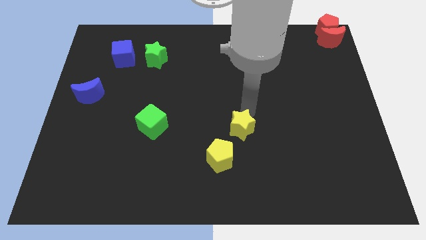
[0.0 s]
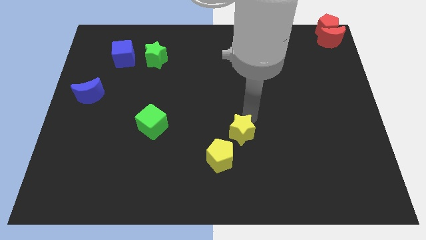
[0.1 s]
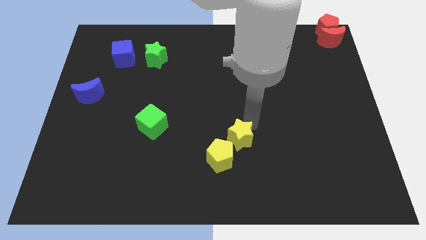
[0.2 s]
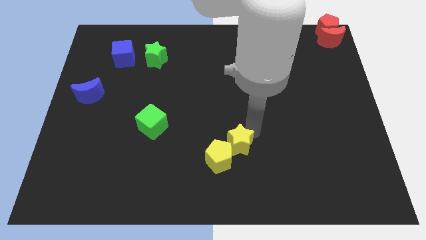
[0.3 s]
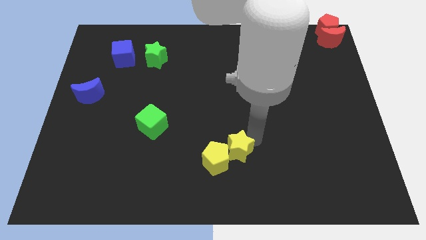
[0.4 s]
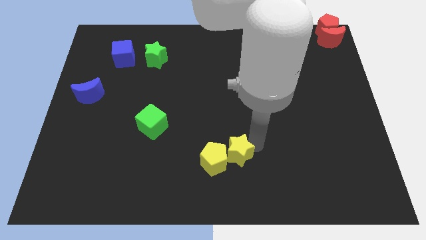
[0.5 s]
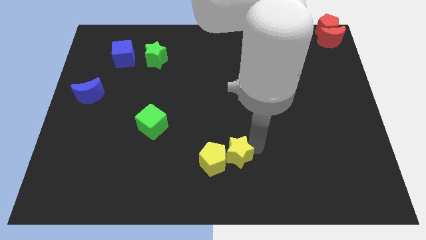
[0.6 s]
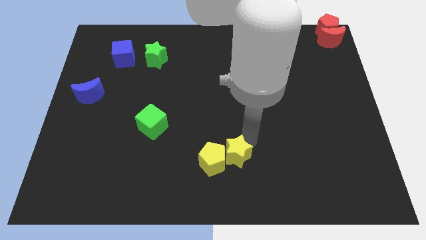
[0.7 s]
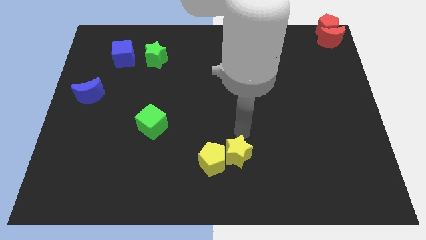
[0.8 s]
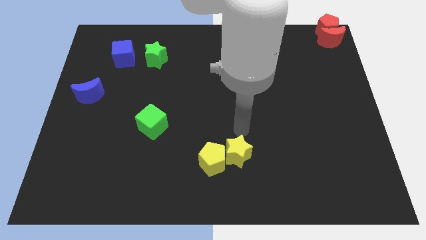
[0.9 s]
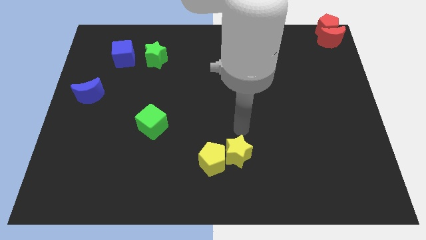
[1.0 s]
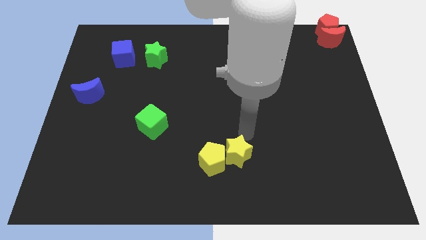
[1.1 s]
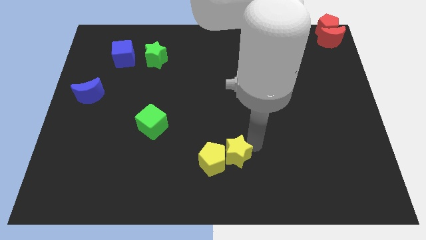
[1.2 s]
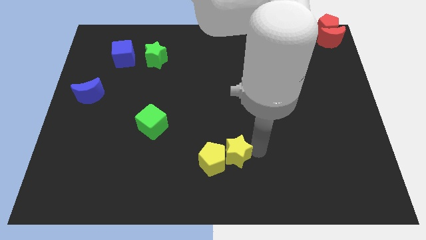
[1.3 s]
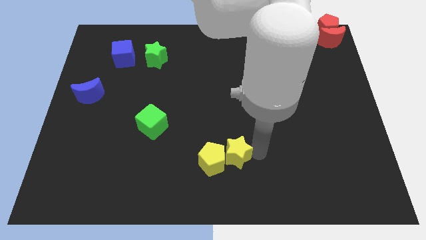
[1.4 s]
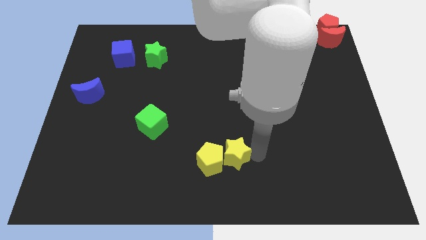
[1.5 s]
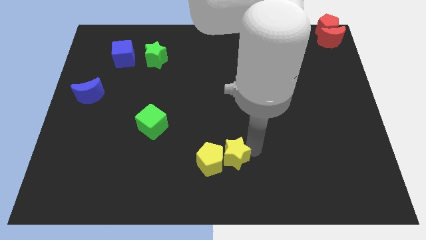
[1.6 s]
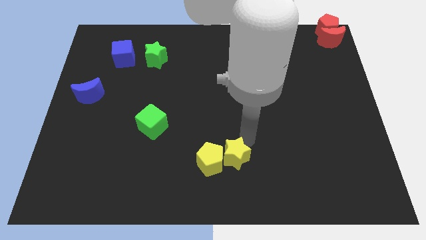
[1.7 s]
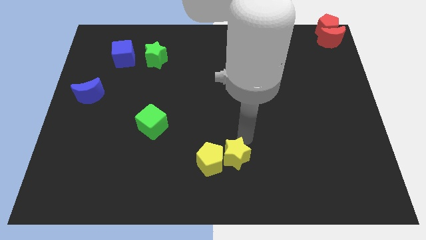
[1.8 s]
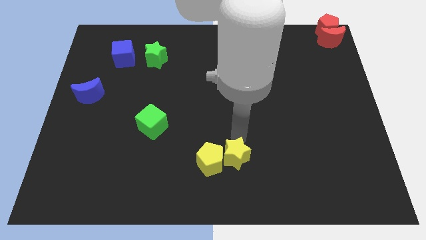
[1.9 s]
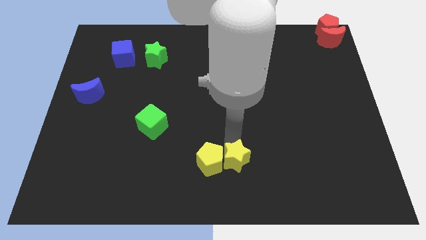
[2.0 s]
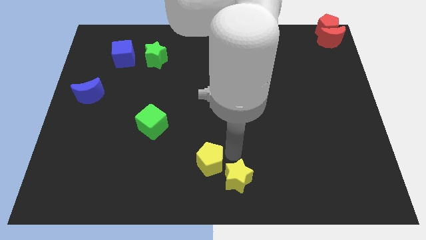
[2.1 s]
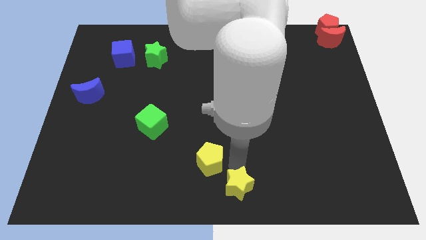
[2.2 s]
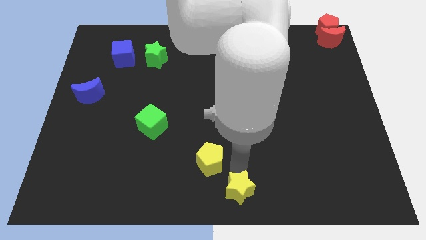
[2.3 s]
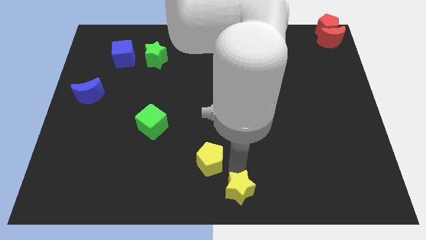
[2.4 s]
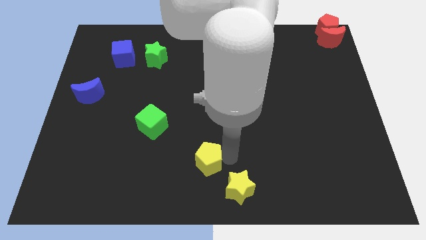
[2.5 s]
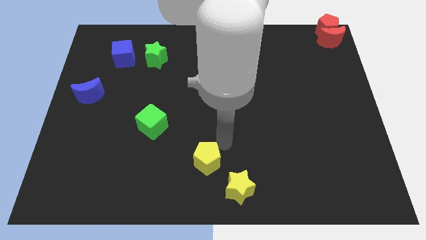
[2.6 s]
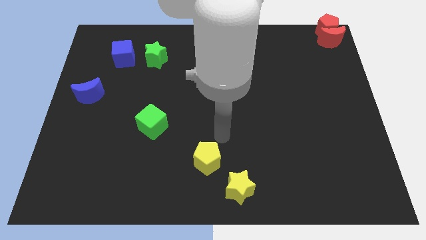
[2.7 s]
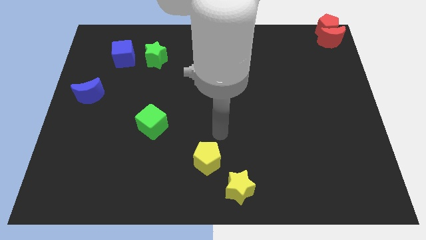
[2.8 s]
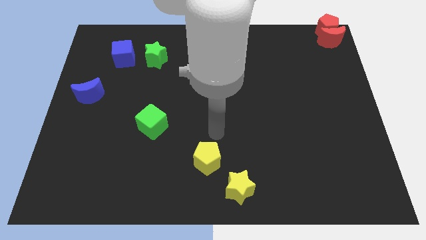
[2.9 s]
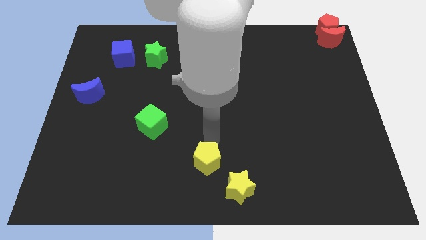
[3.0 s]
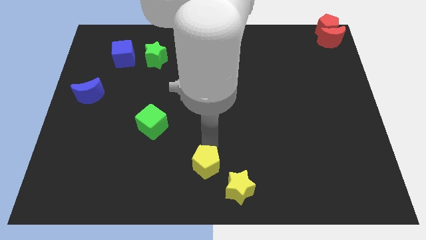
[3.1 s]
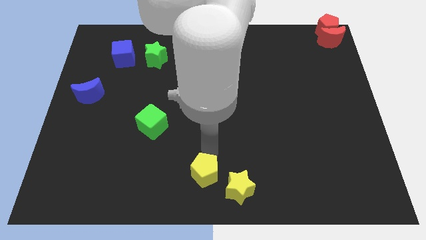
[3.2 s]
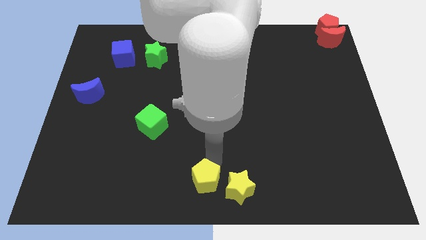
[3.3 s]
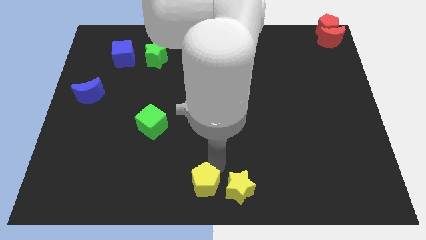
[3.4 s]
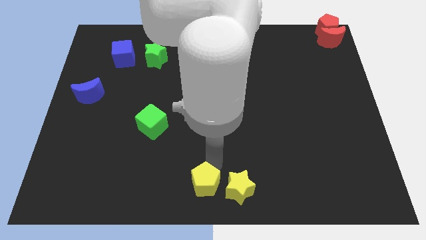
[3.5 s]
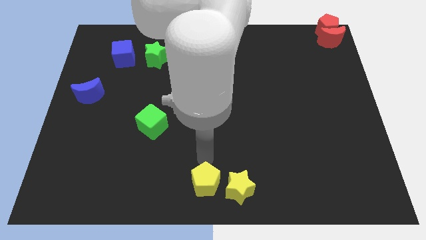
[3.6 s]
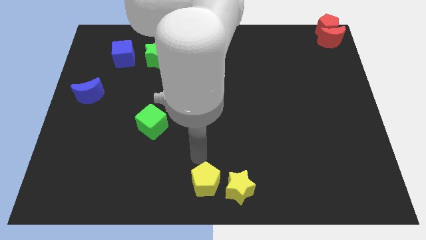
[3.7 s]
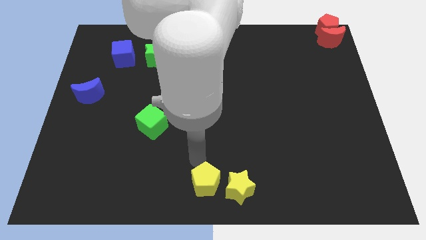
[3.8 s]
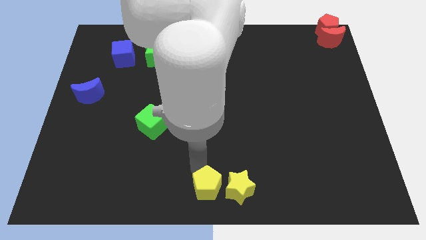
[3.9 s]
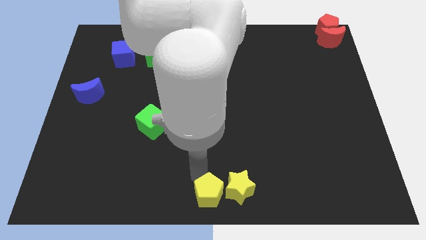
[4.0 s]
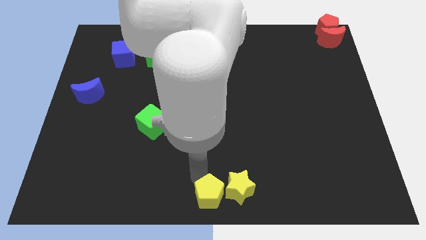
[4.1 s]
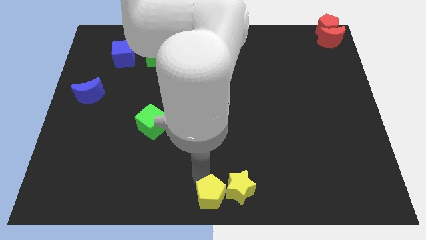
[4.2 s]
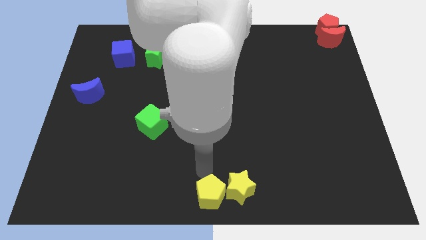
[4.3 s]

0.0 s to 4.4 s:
move the yellow blocks towards the bottom center

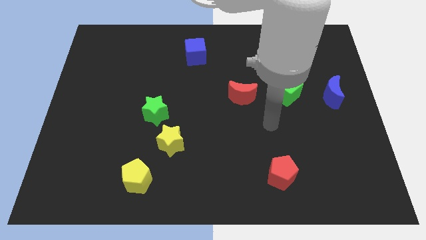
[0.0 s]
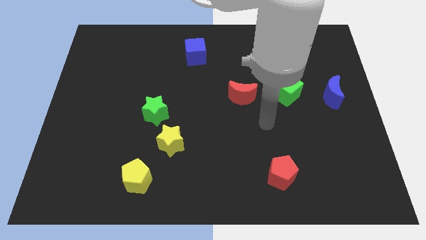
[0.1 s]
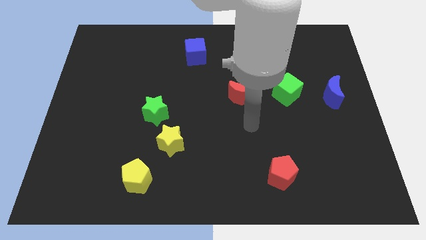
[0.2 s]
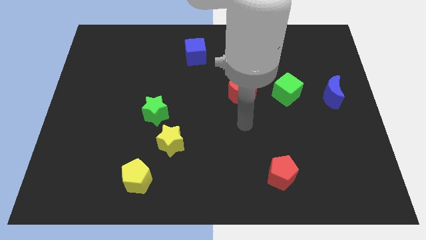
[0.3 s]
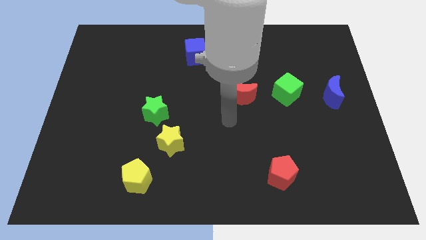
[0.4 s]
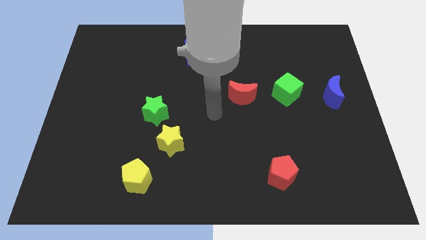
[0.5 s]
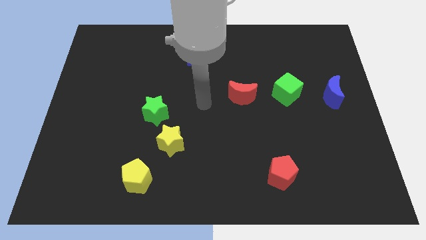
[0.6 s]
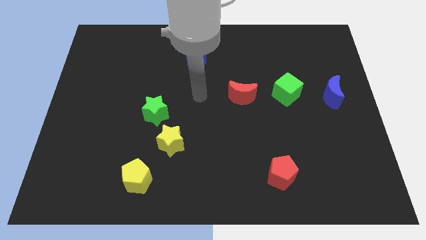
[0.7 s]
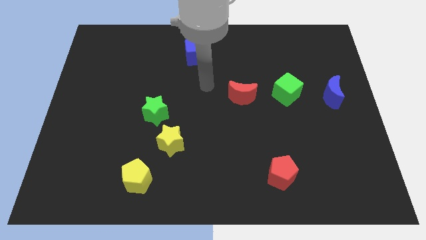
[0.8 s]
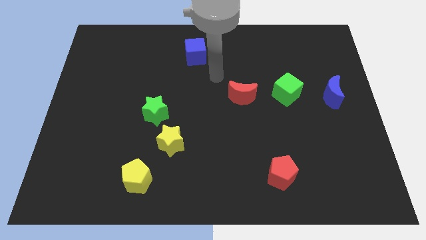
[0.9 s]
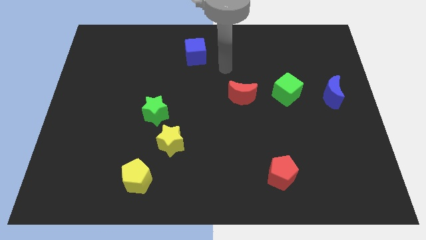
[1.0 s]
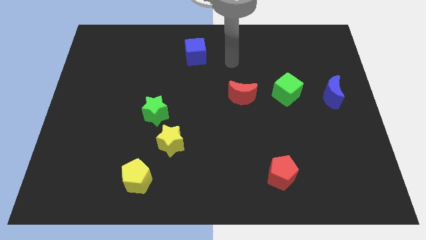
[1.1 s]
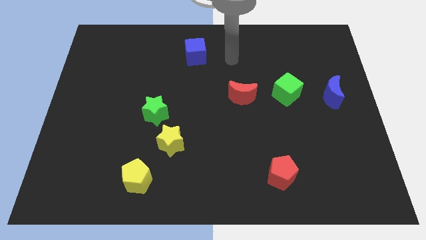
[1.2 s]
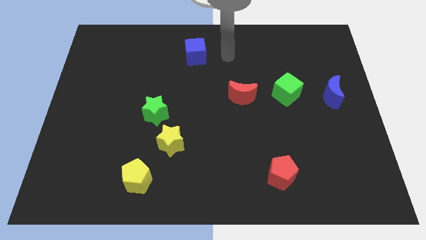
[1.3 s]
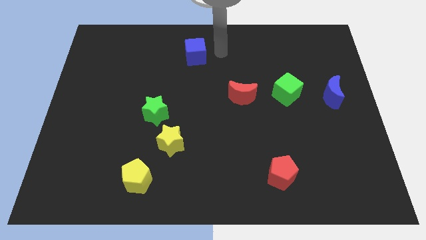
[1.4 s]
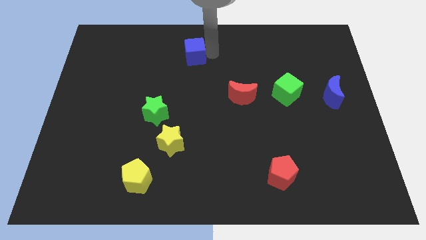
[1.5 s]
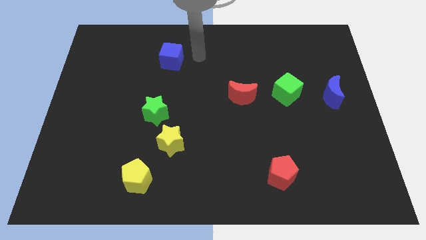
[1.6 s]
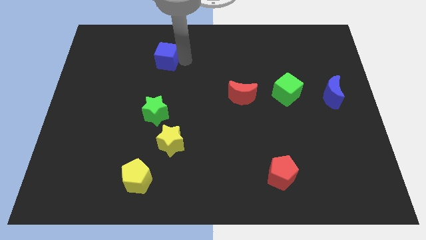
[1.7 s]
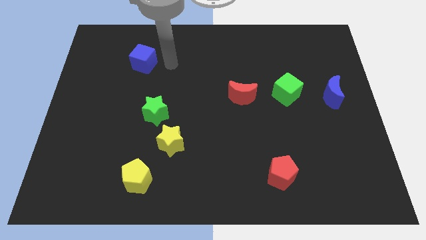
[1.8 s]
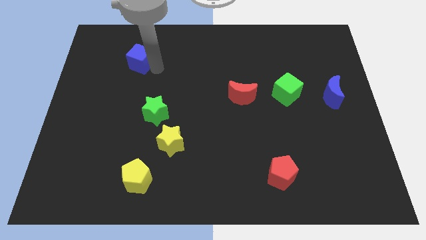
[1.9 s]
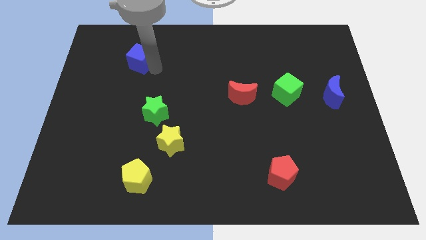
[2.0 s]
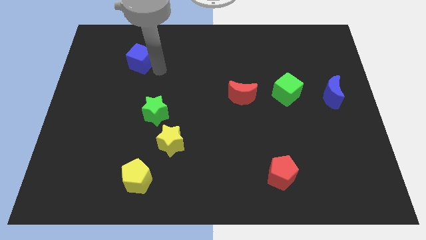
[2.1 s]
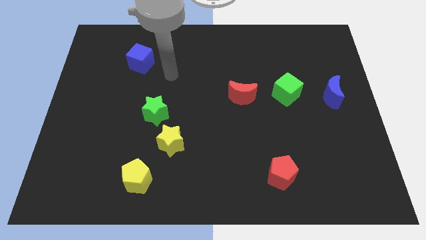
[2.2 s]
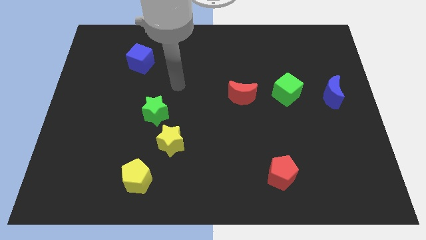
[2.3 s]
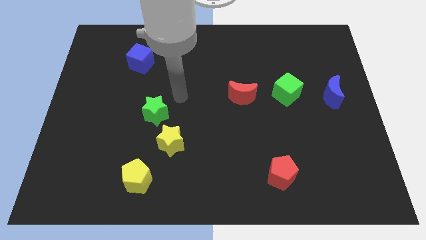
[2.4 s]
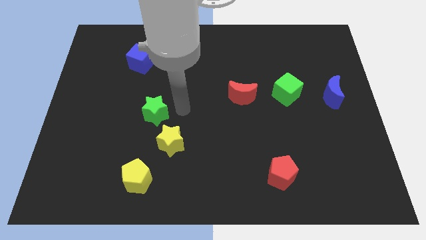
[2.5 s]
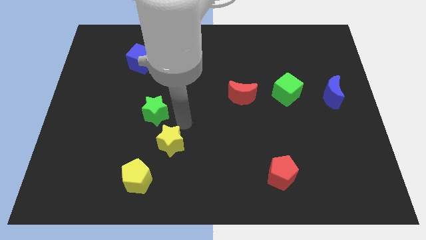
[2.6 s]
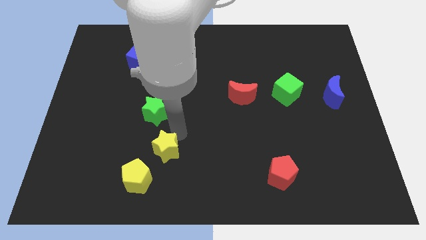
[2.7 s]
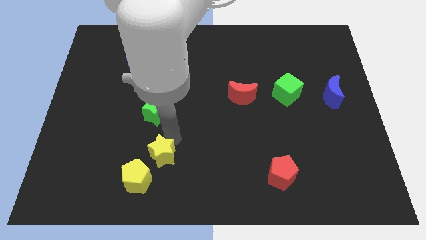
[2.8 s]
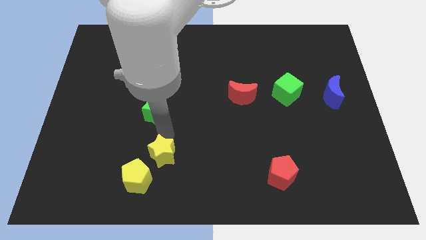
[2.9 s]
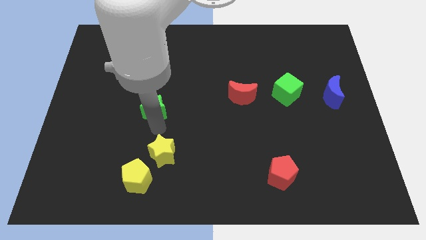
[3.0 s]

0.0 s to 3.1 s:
slide blue cube and the yellow star to the left

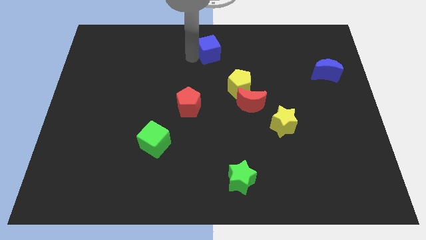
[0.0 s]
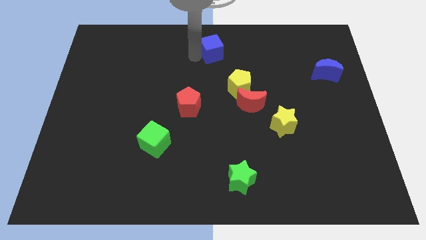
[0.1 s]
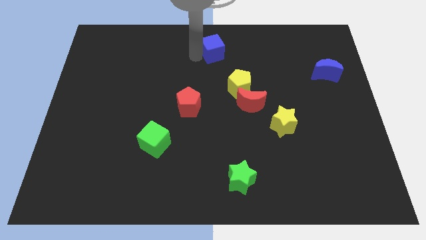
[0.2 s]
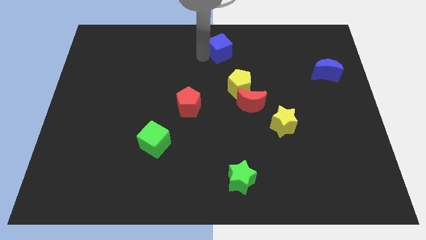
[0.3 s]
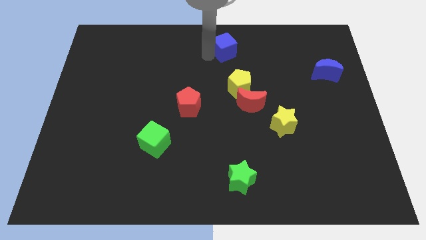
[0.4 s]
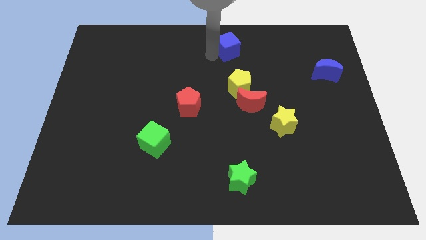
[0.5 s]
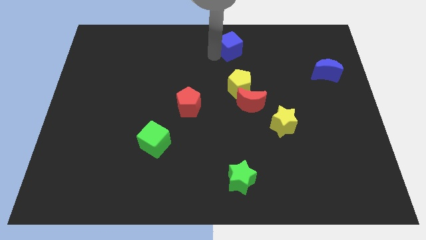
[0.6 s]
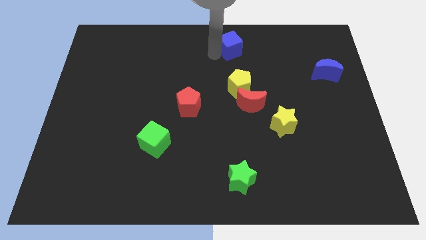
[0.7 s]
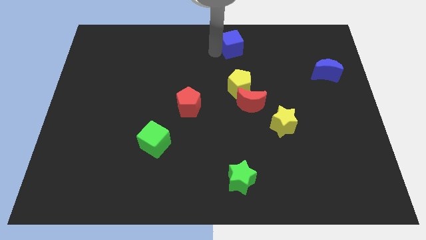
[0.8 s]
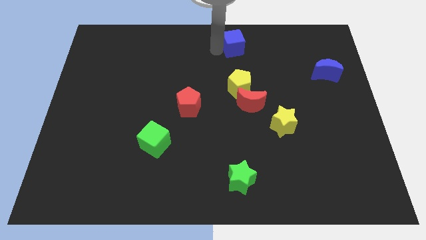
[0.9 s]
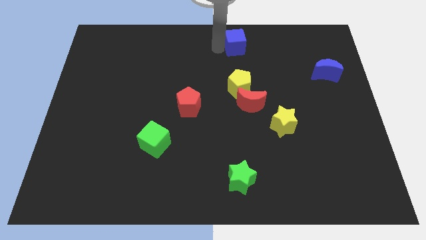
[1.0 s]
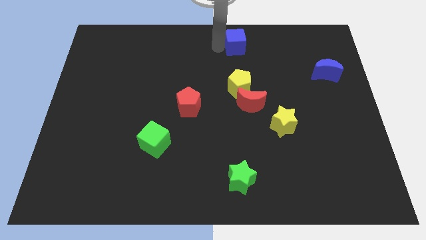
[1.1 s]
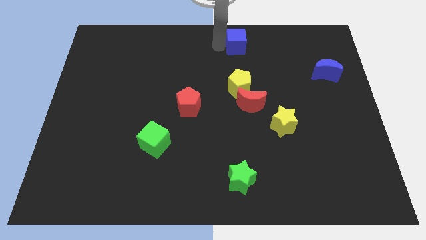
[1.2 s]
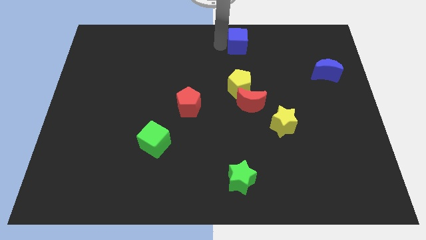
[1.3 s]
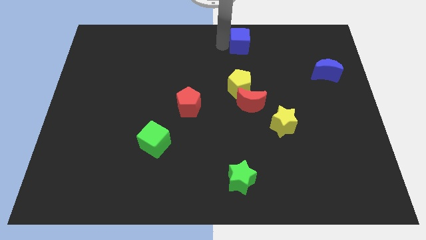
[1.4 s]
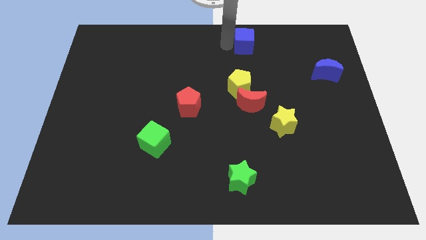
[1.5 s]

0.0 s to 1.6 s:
place the blue cube above the yellow pentagon
